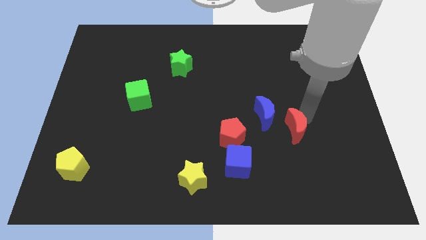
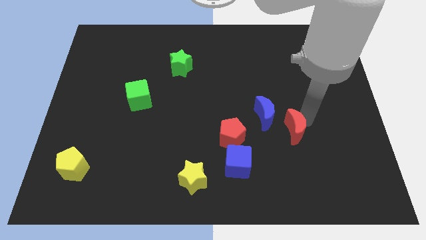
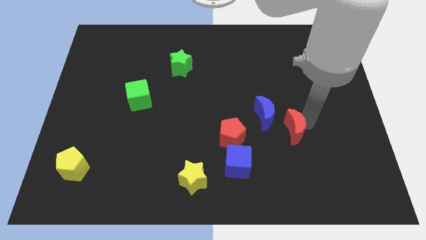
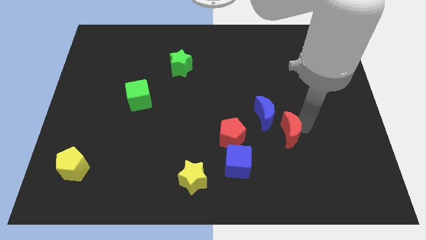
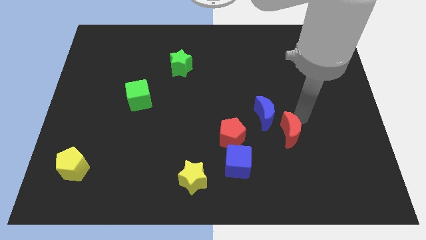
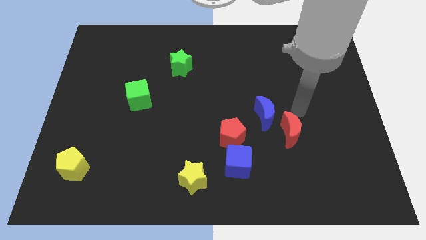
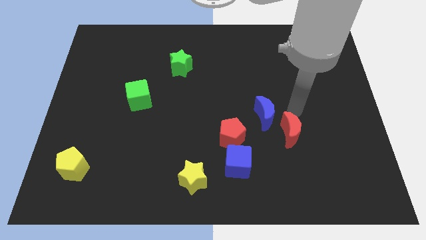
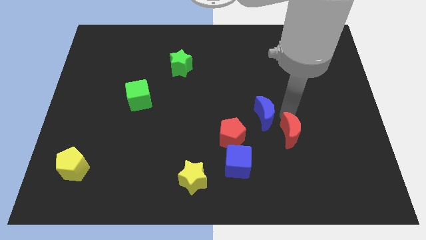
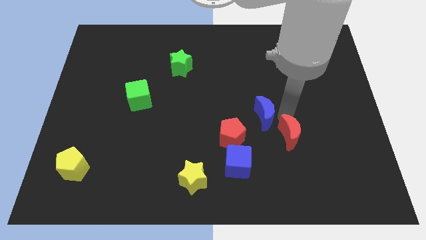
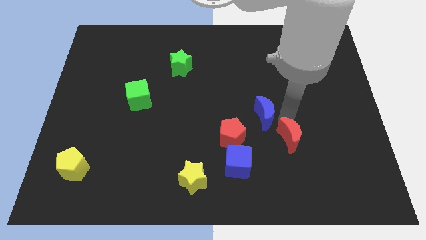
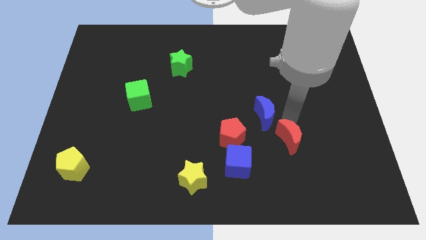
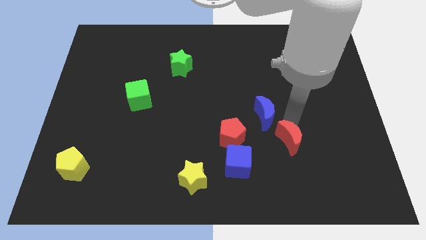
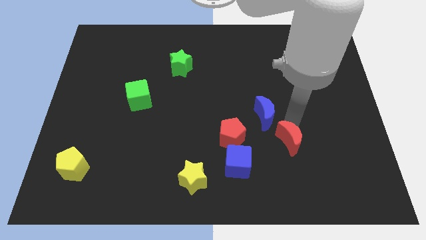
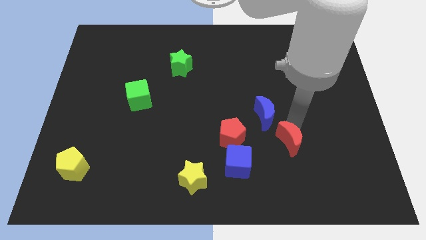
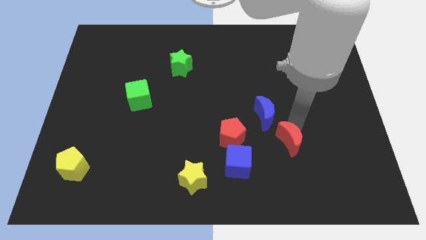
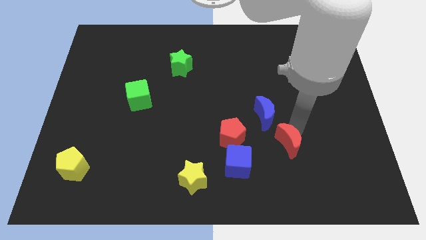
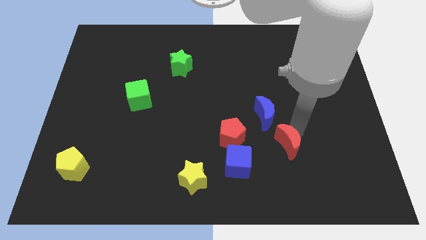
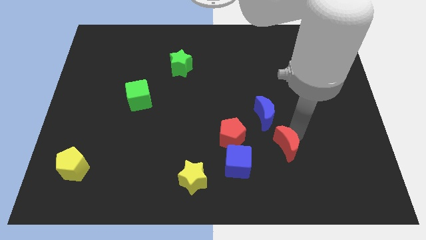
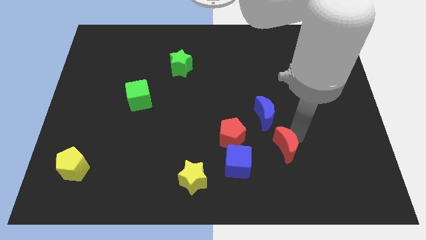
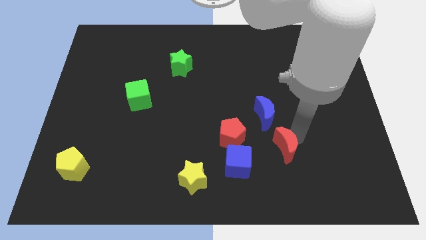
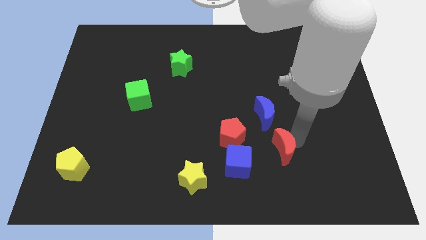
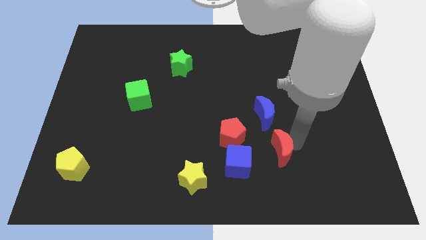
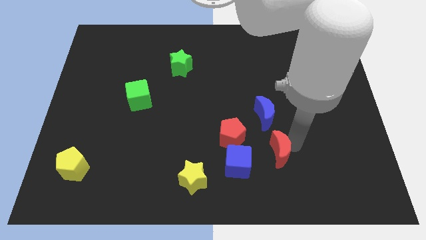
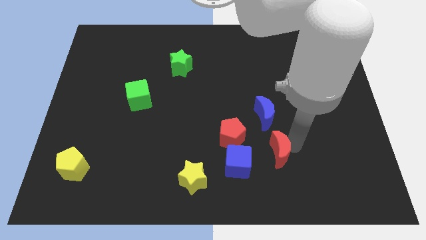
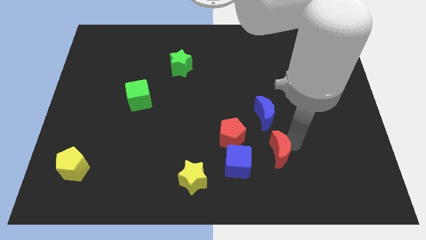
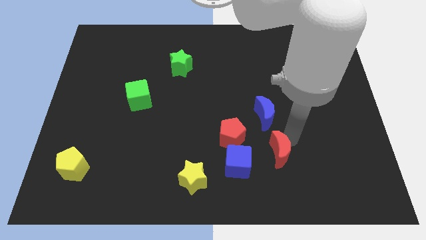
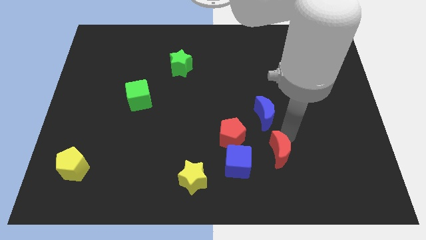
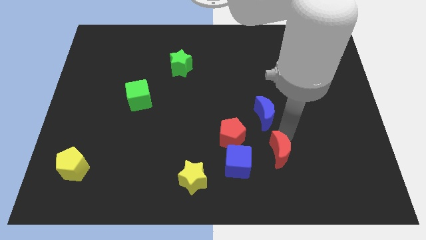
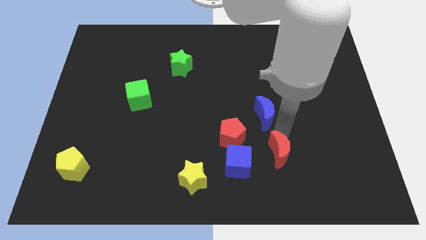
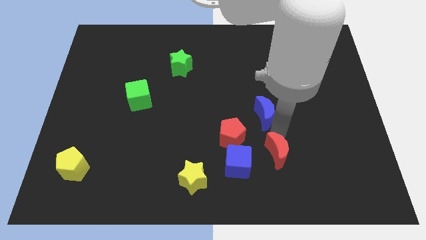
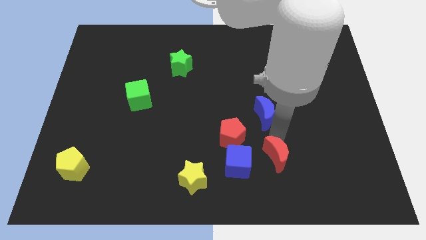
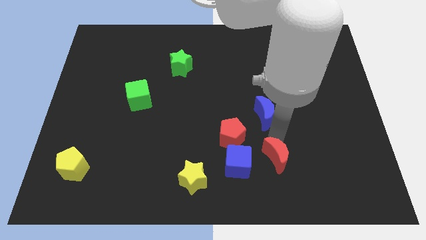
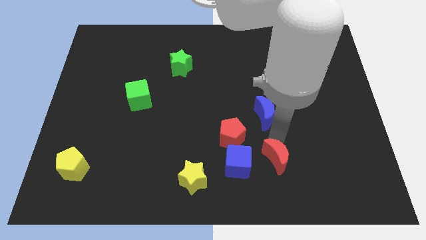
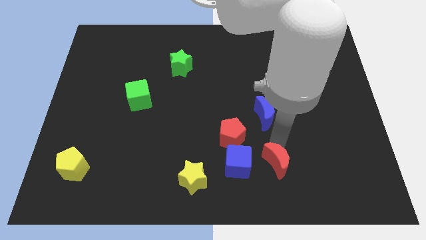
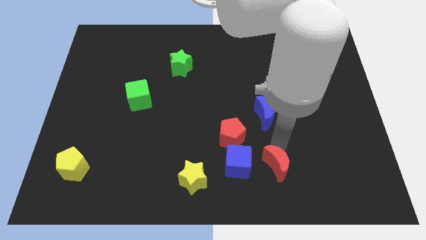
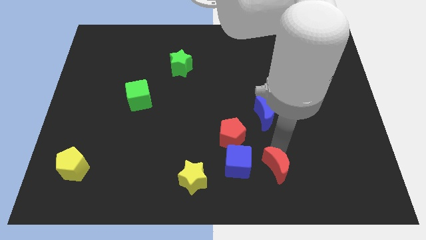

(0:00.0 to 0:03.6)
place the red moon to the right of the blue cube

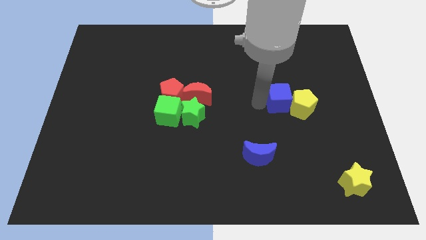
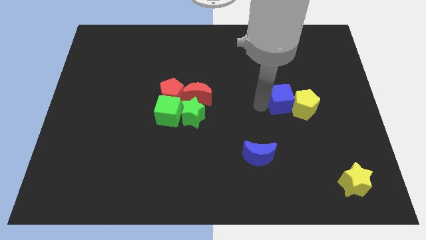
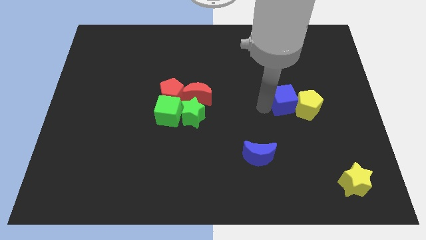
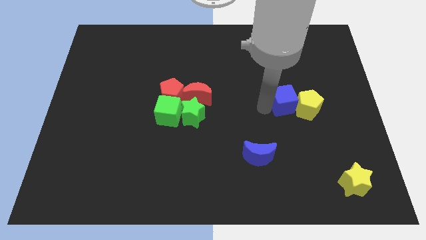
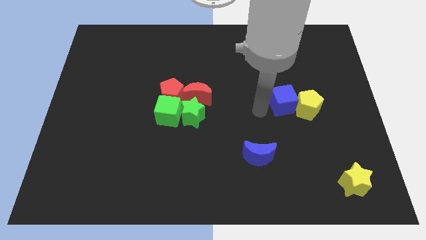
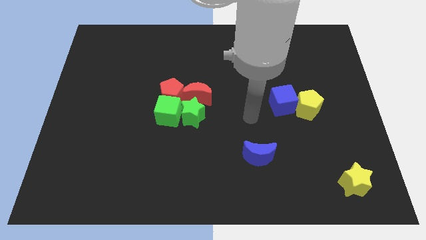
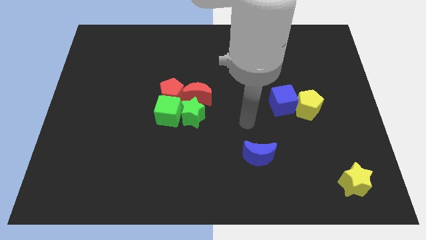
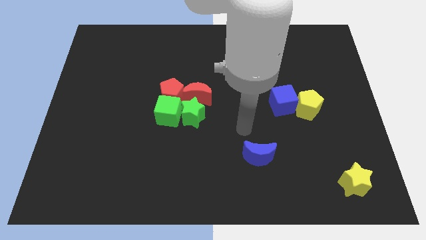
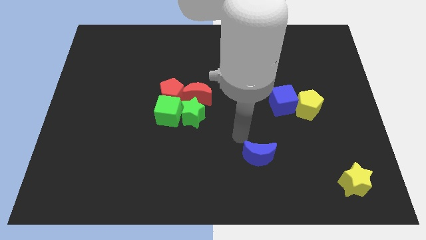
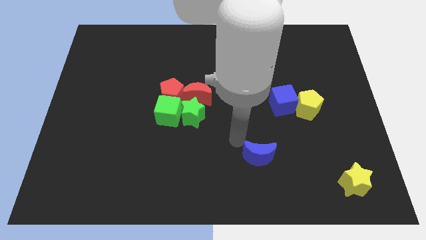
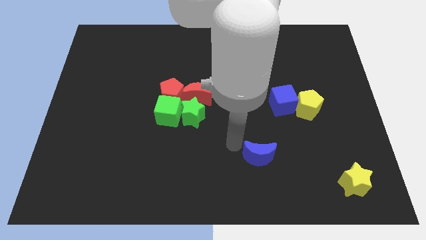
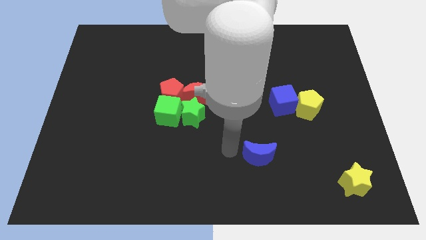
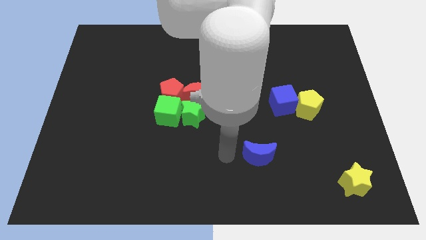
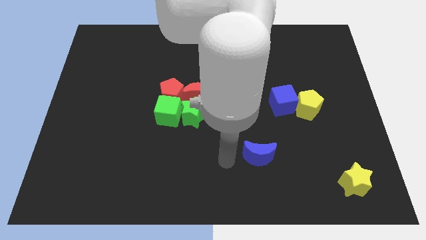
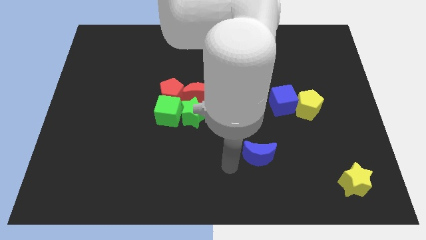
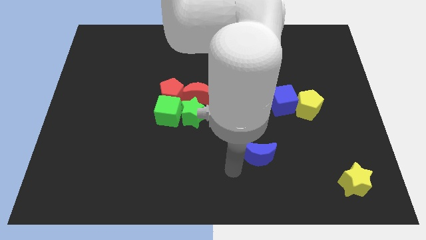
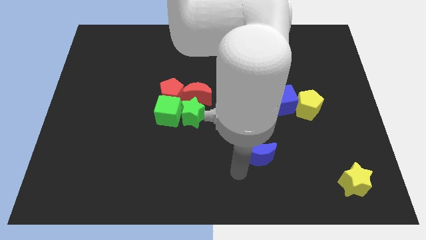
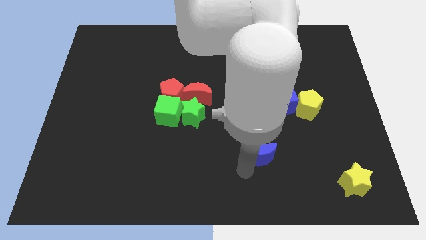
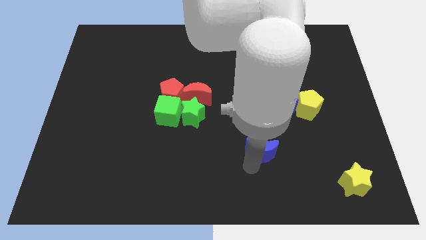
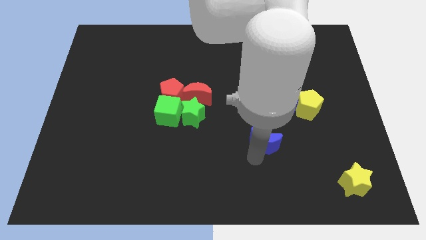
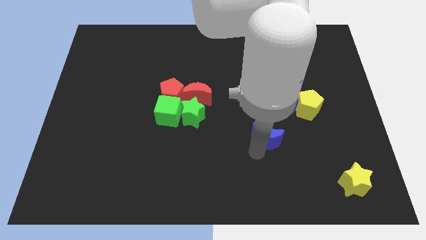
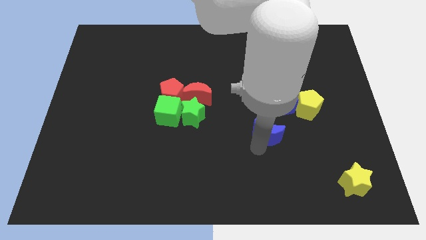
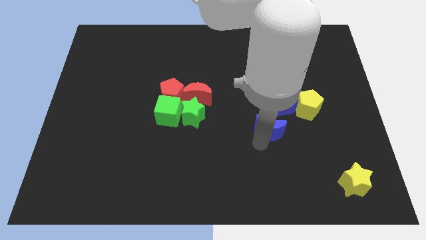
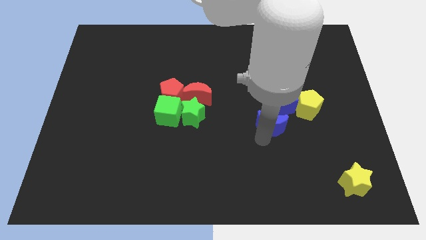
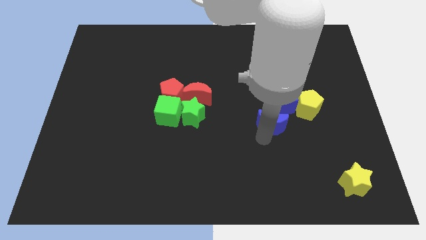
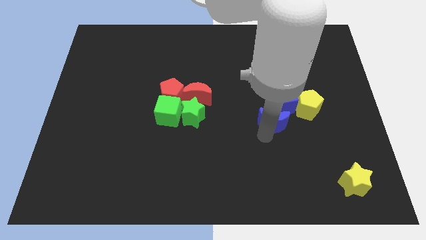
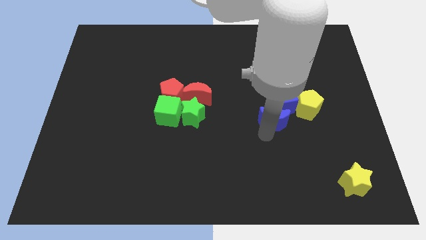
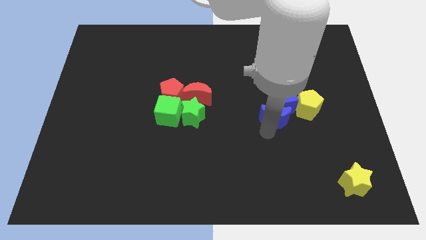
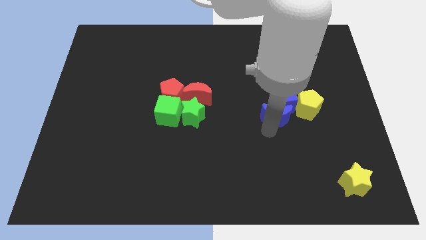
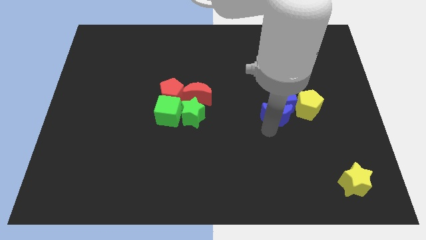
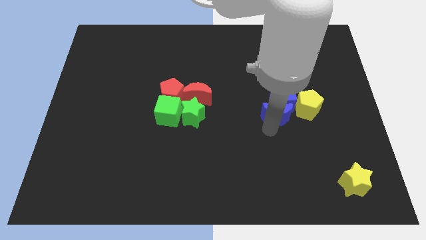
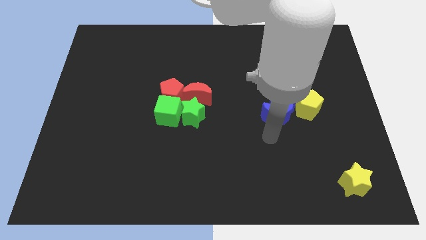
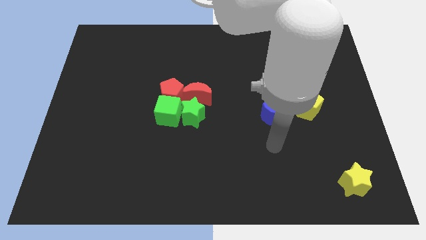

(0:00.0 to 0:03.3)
move blue crescent into blue cube

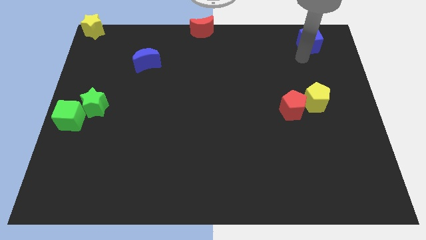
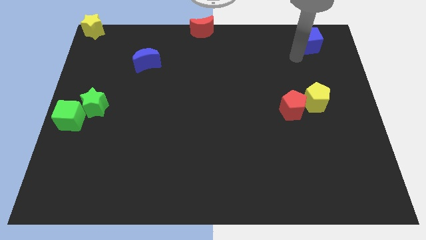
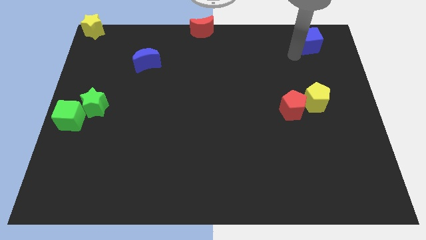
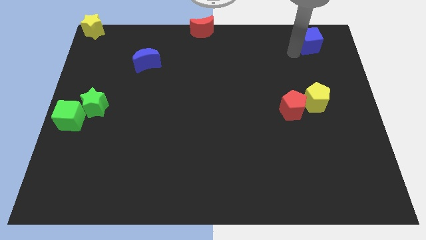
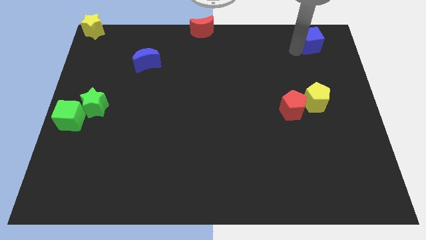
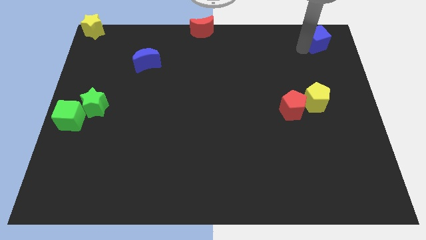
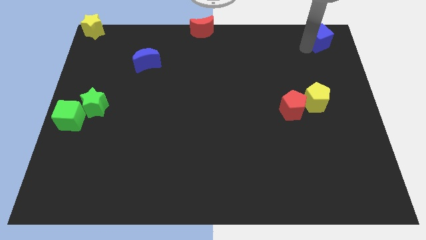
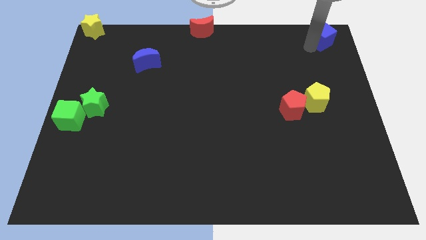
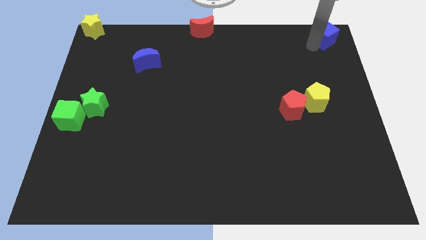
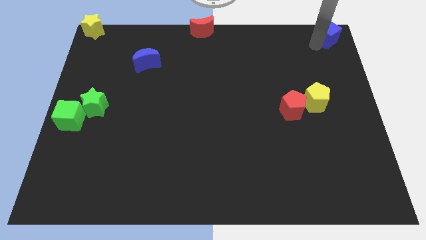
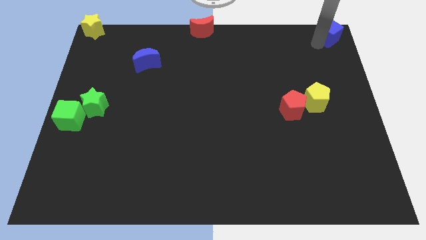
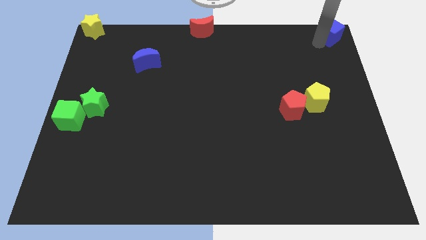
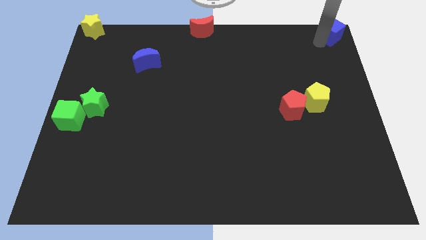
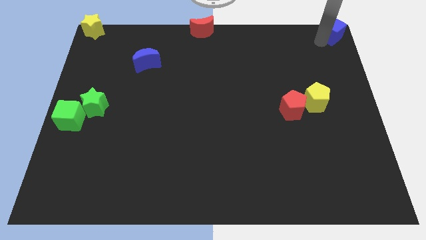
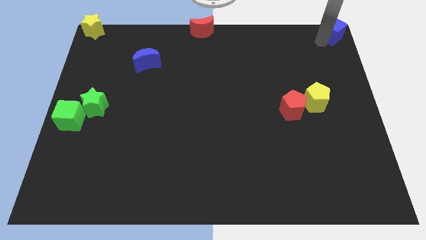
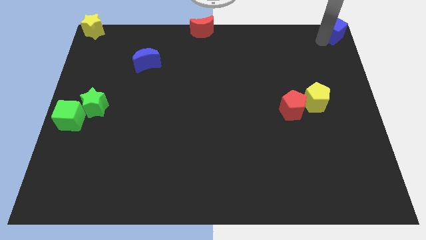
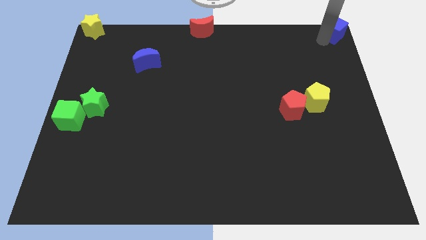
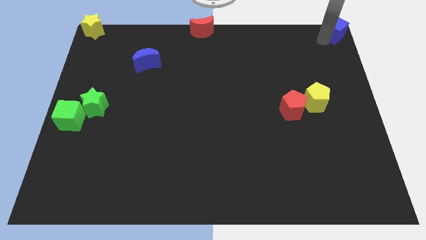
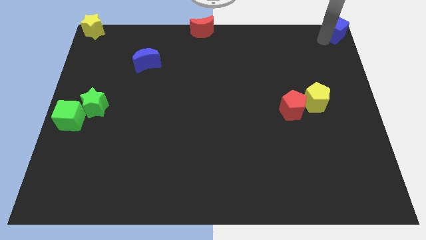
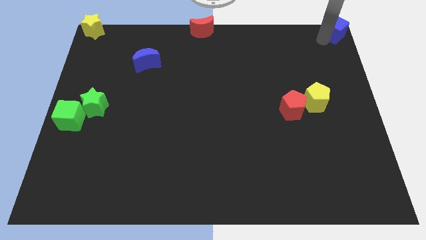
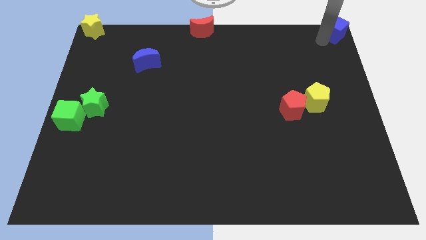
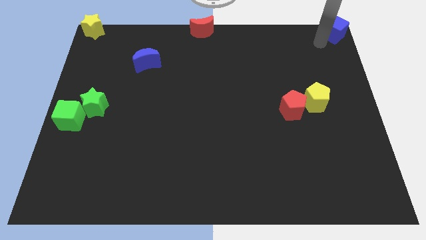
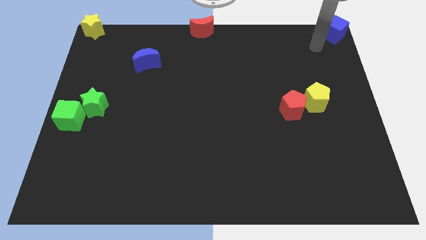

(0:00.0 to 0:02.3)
move the blue block to the top right corner
